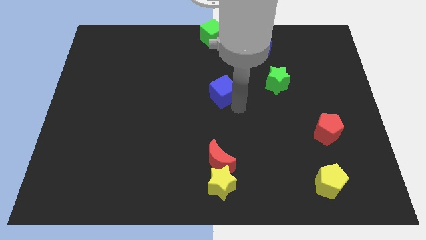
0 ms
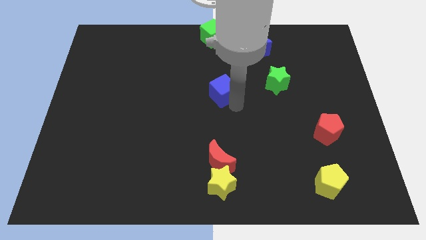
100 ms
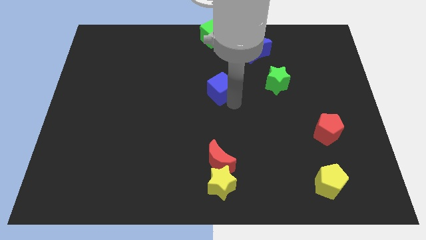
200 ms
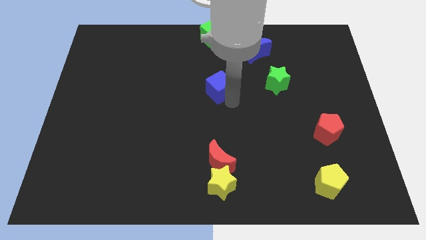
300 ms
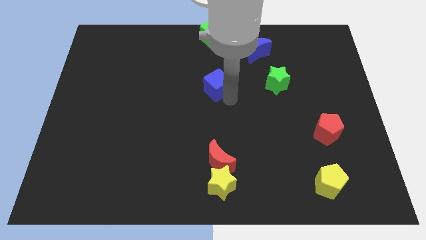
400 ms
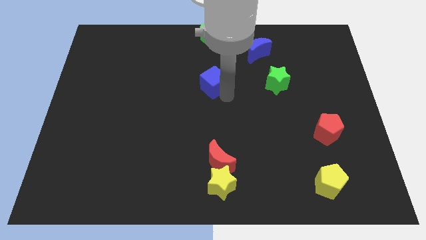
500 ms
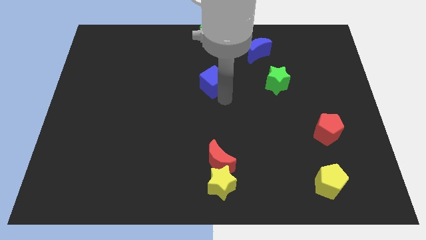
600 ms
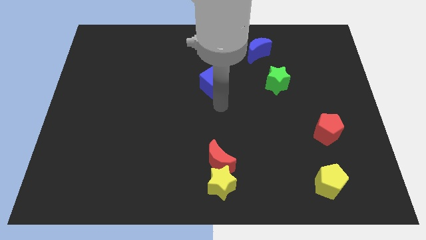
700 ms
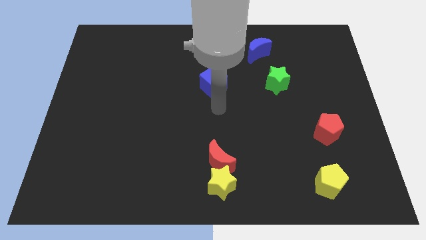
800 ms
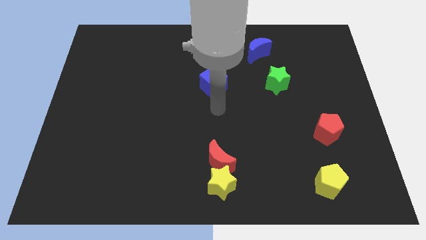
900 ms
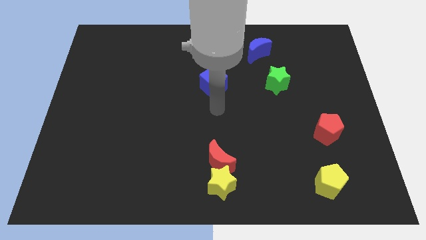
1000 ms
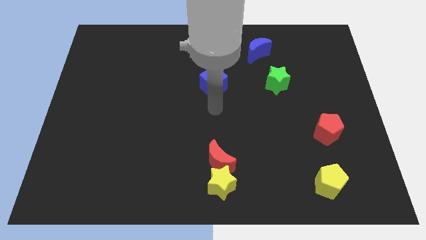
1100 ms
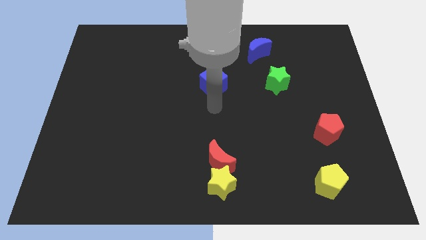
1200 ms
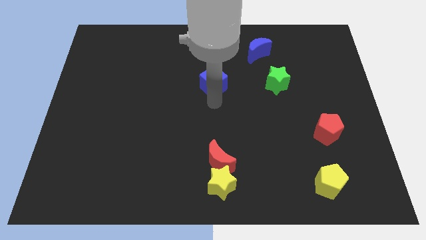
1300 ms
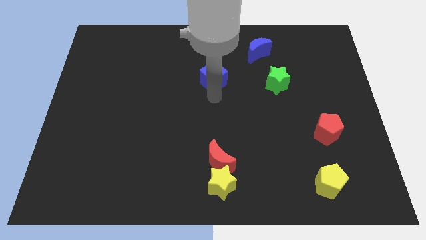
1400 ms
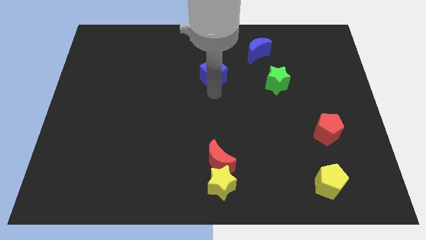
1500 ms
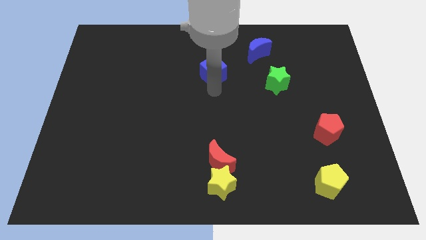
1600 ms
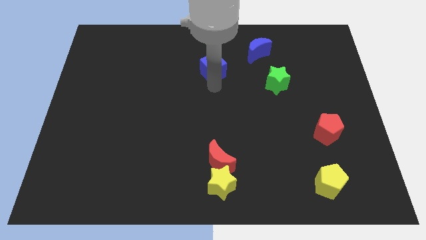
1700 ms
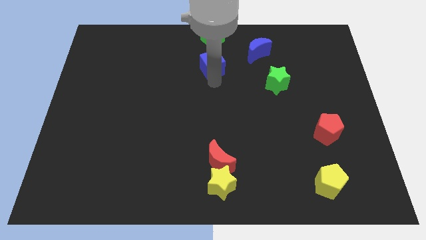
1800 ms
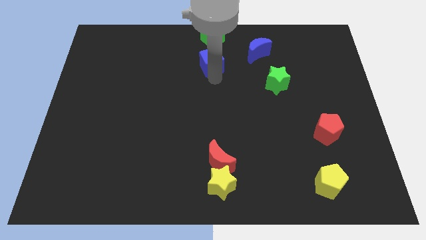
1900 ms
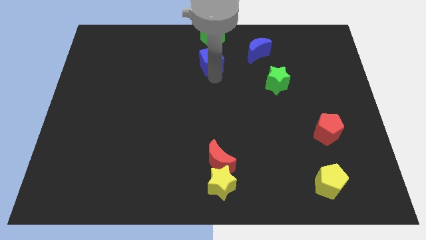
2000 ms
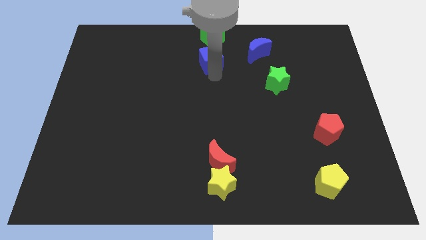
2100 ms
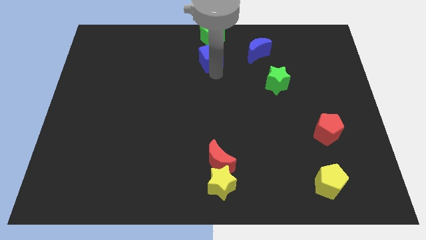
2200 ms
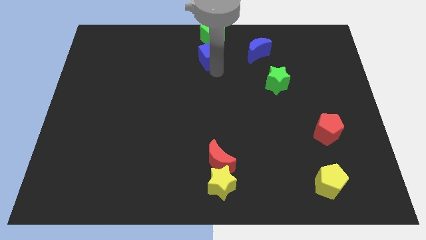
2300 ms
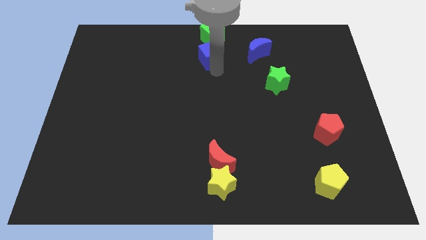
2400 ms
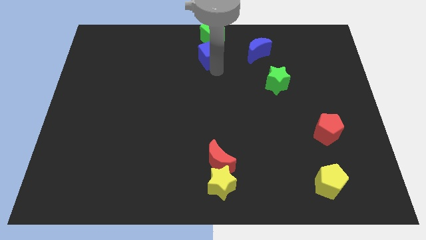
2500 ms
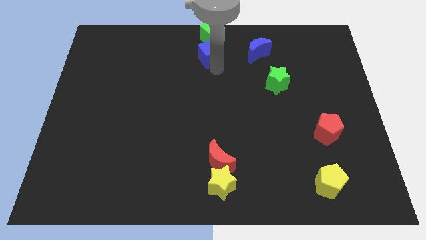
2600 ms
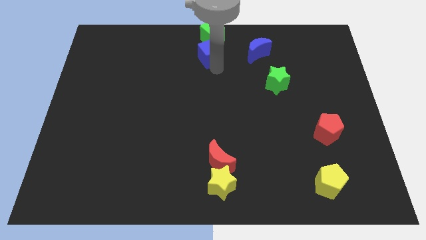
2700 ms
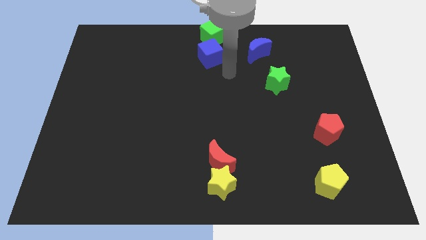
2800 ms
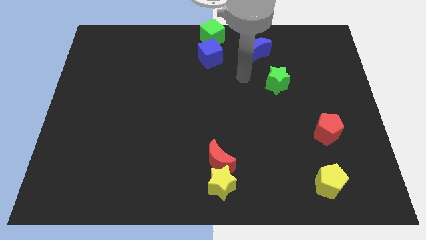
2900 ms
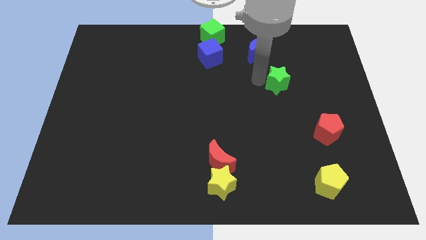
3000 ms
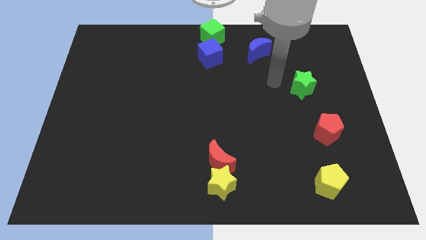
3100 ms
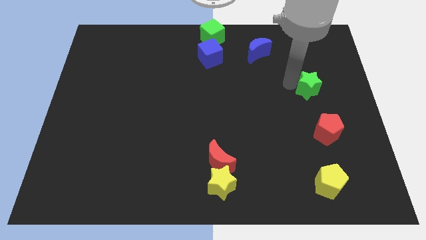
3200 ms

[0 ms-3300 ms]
push the blue cube towards the top center of the board

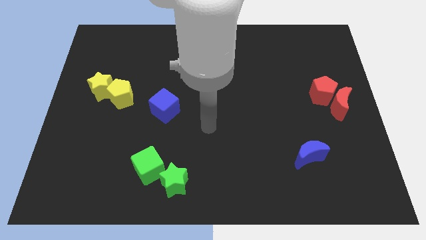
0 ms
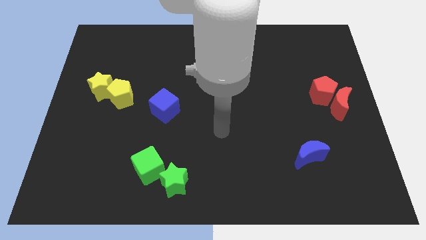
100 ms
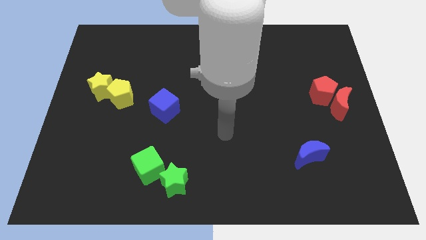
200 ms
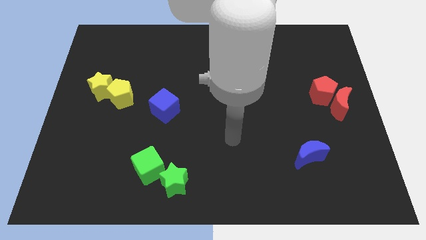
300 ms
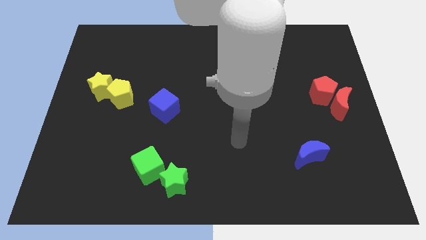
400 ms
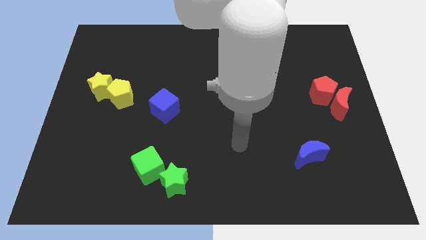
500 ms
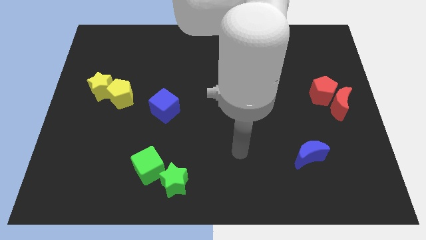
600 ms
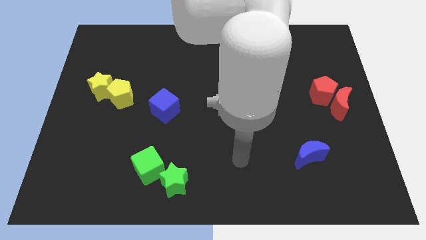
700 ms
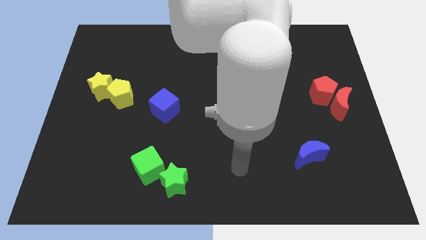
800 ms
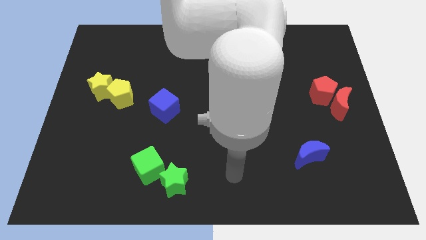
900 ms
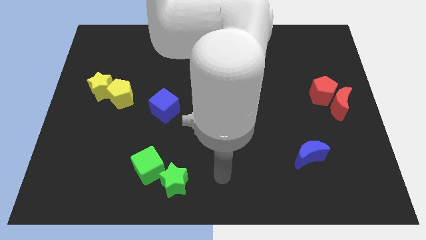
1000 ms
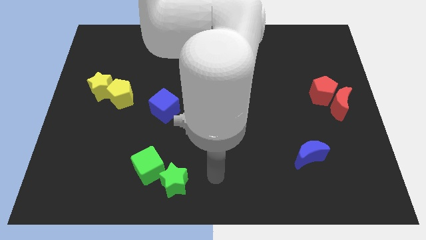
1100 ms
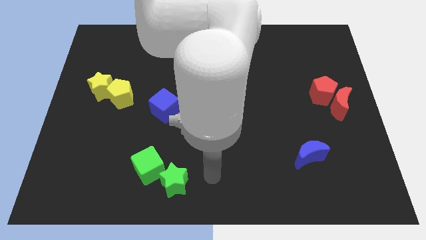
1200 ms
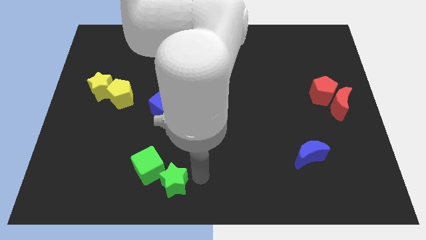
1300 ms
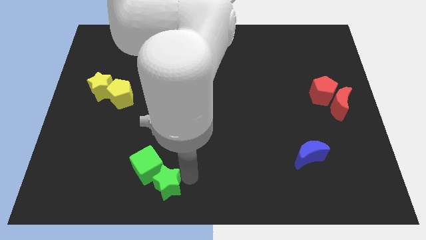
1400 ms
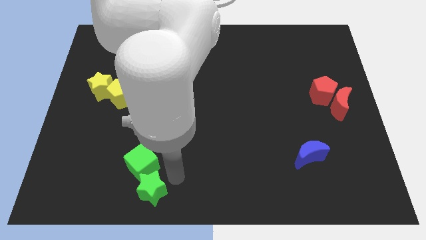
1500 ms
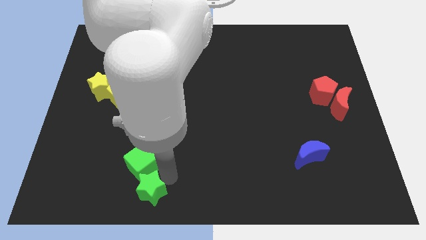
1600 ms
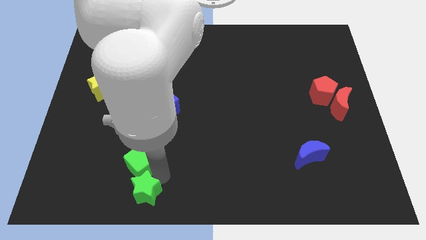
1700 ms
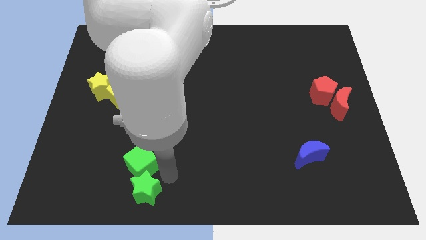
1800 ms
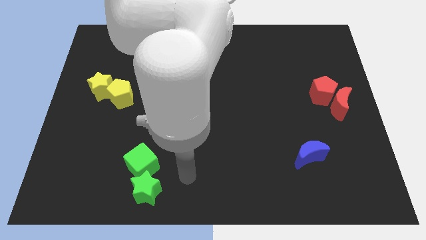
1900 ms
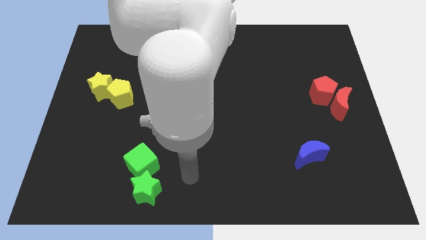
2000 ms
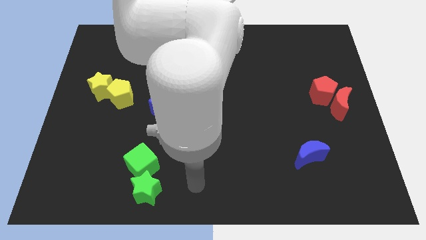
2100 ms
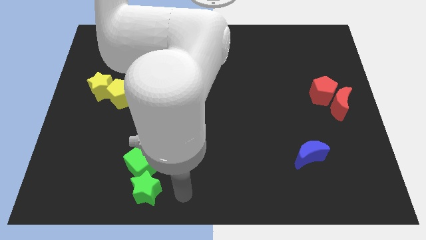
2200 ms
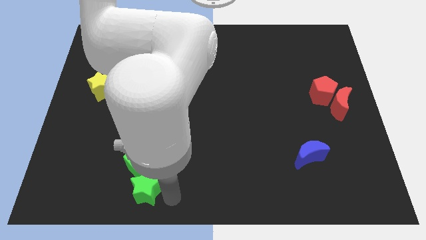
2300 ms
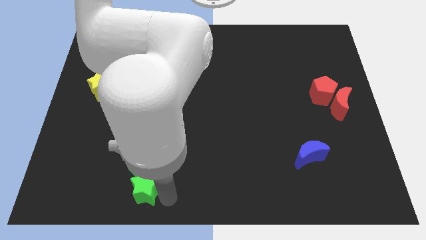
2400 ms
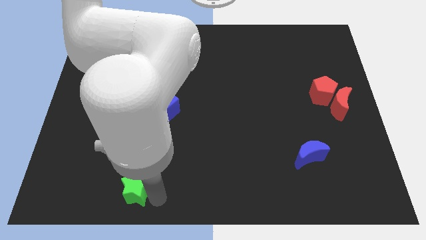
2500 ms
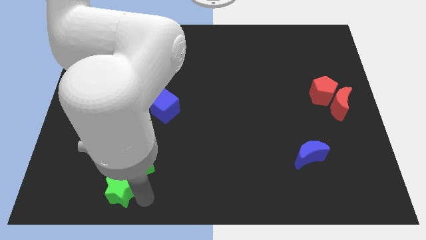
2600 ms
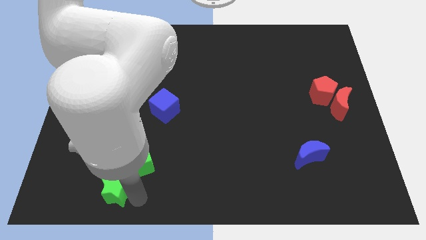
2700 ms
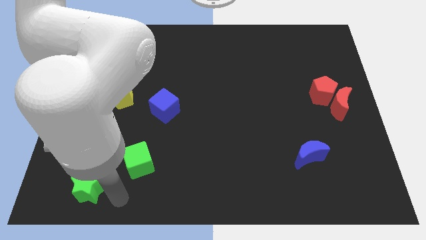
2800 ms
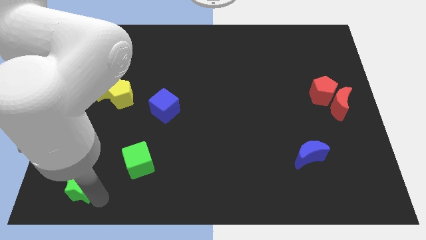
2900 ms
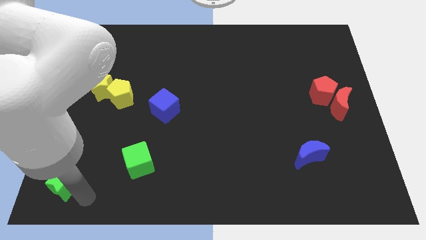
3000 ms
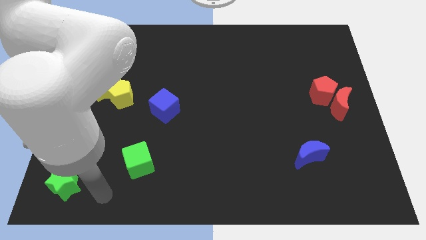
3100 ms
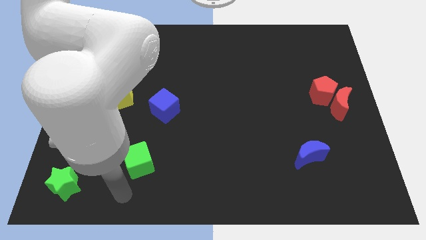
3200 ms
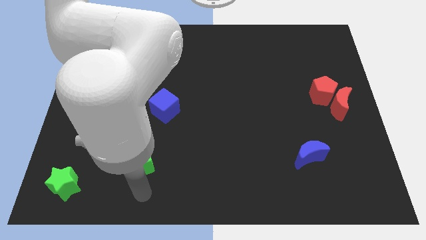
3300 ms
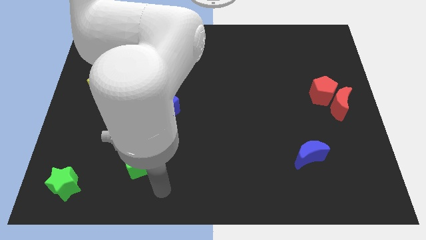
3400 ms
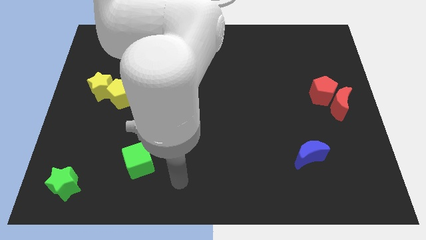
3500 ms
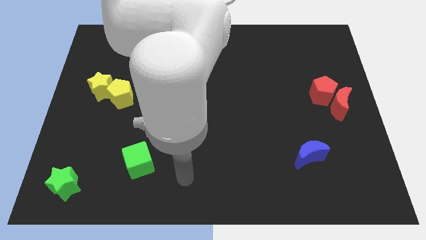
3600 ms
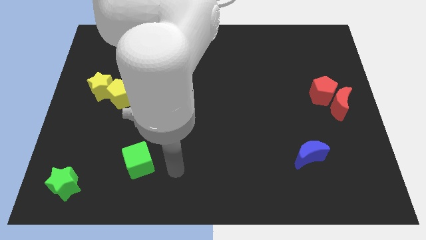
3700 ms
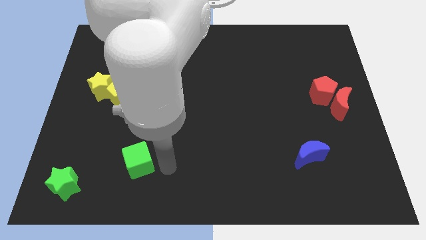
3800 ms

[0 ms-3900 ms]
move the green star to the bottom left corner

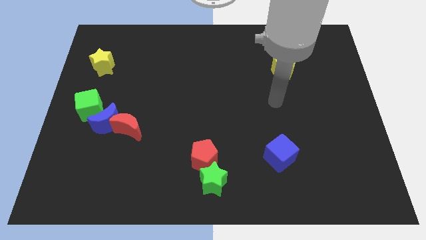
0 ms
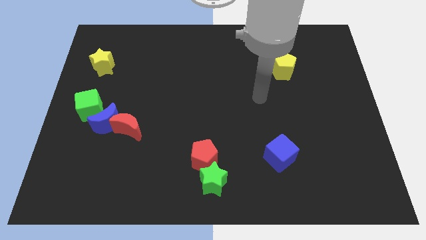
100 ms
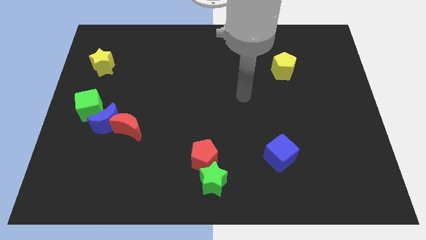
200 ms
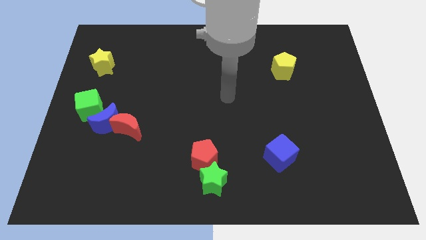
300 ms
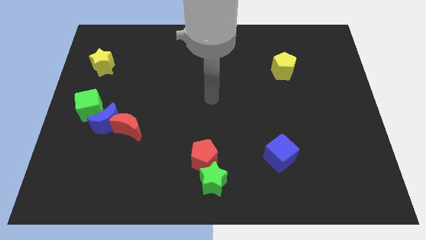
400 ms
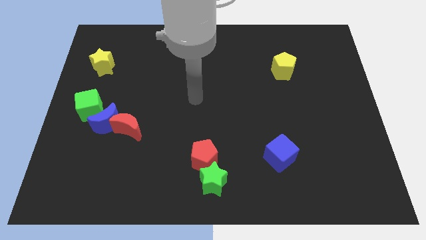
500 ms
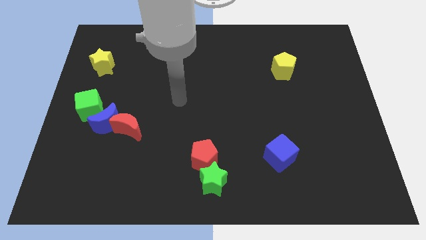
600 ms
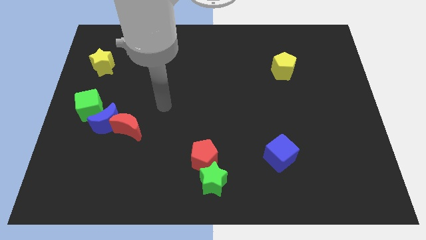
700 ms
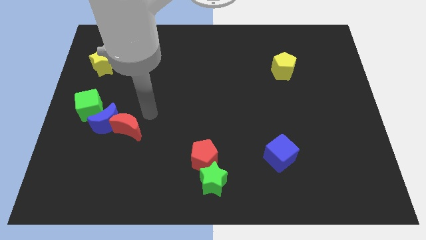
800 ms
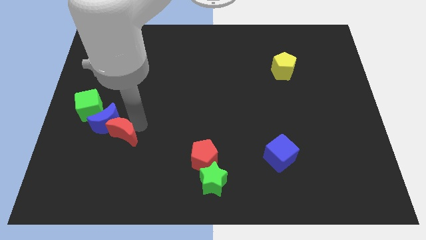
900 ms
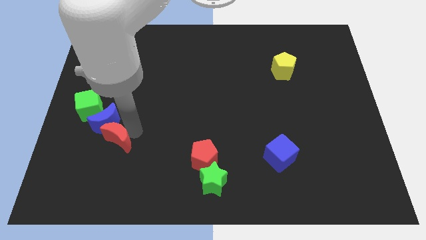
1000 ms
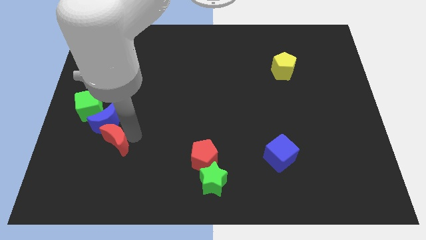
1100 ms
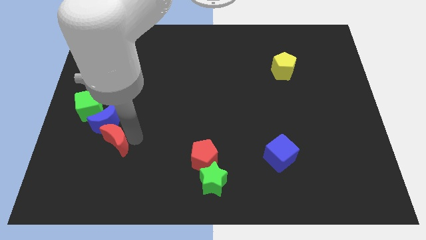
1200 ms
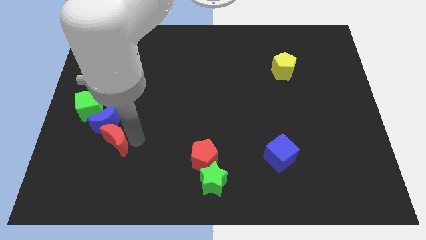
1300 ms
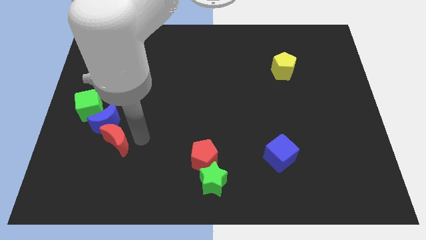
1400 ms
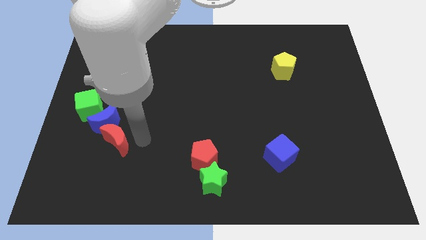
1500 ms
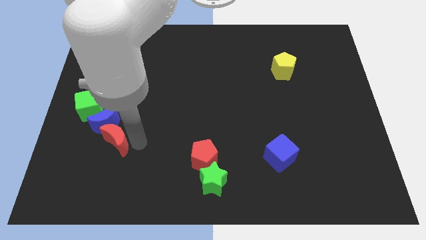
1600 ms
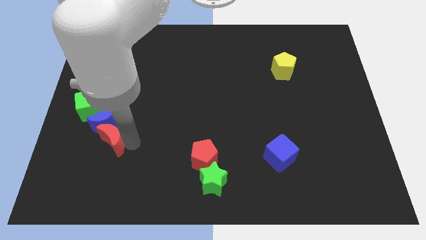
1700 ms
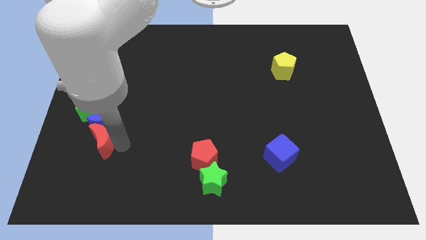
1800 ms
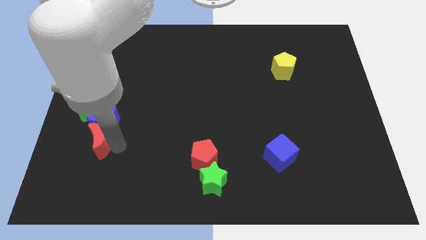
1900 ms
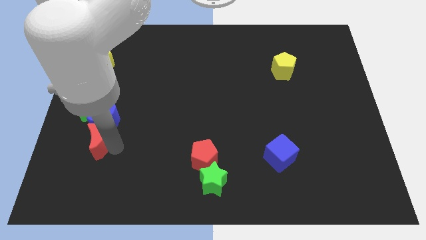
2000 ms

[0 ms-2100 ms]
move the red crescent towards left side
